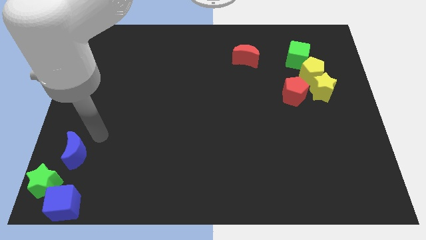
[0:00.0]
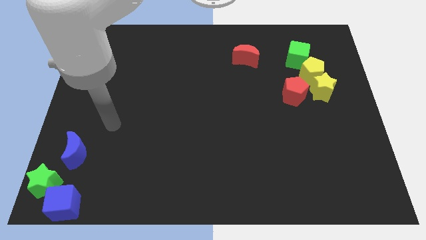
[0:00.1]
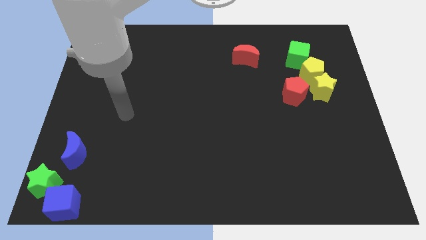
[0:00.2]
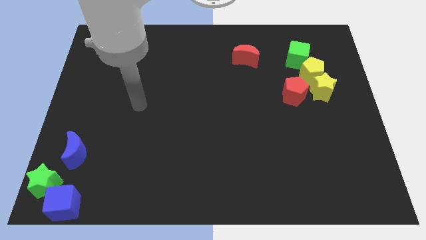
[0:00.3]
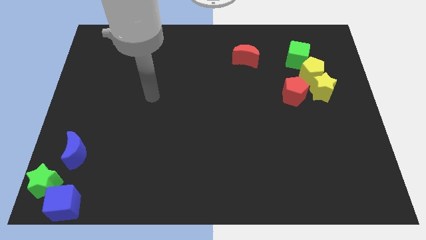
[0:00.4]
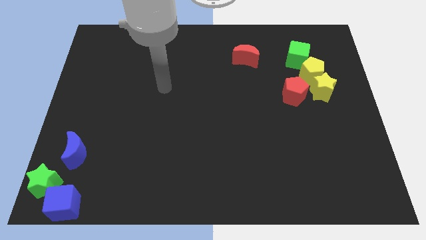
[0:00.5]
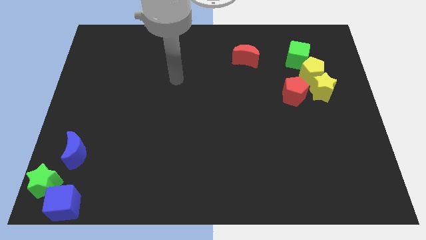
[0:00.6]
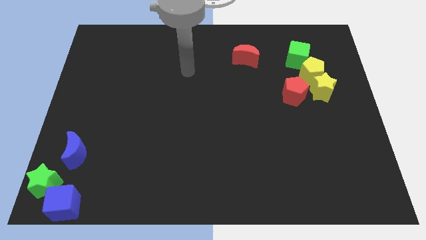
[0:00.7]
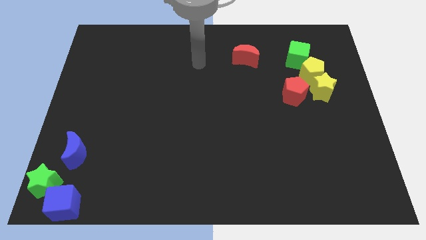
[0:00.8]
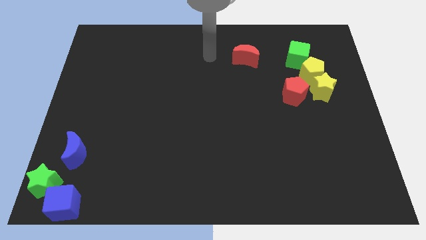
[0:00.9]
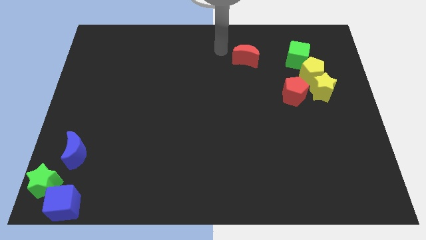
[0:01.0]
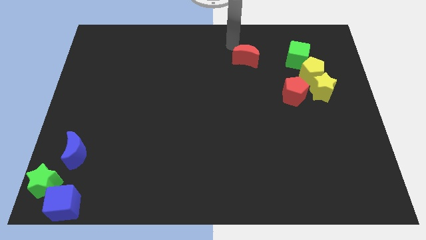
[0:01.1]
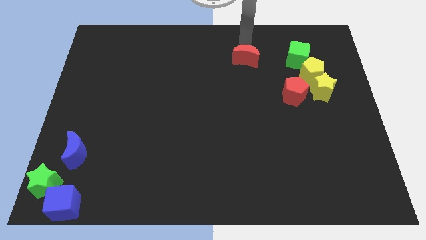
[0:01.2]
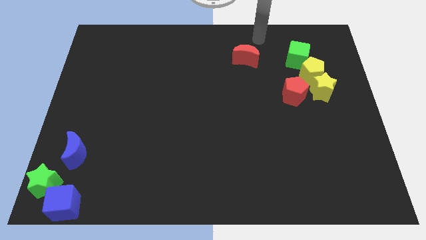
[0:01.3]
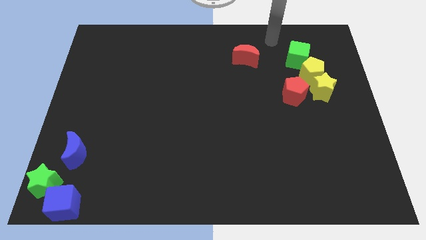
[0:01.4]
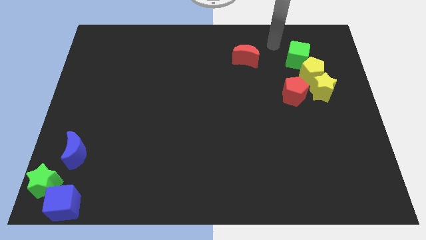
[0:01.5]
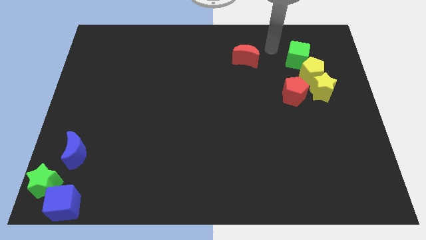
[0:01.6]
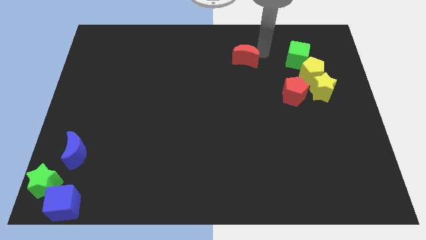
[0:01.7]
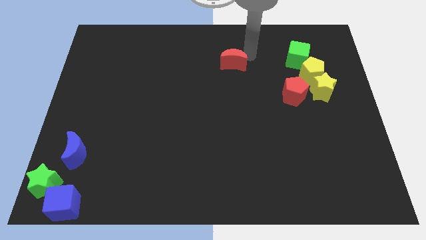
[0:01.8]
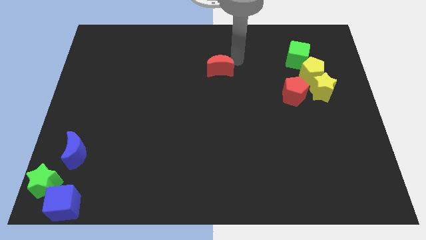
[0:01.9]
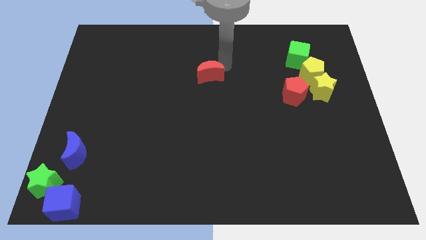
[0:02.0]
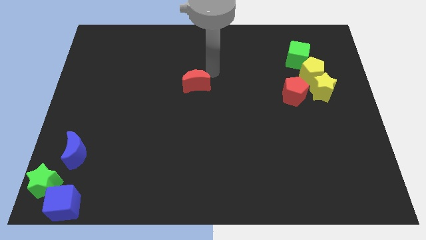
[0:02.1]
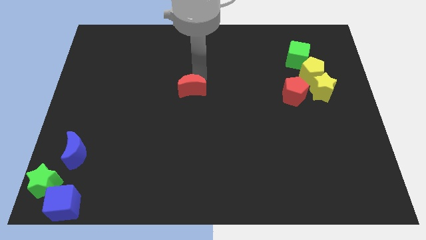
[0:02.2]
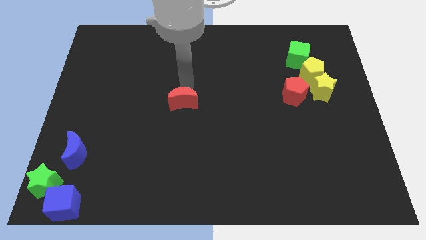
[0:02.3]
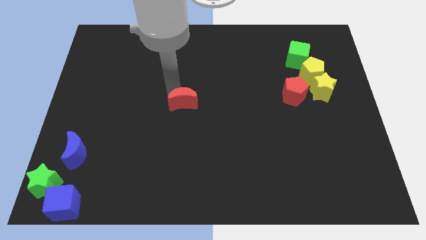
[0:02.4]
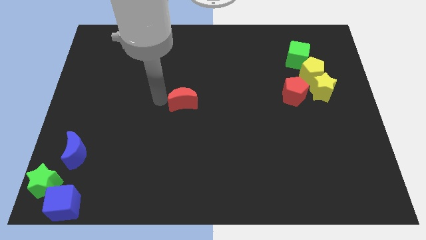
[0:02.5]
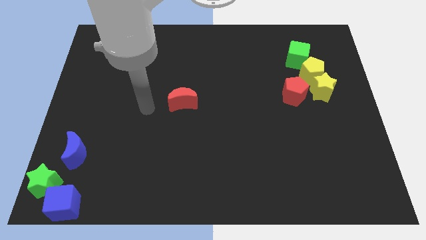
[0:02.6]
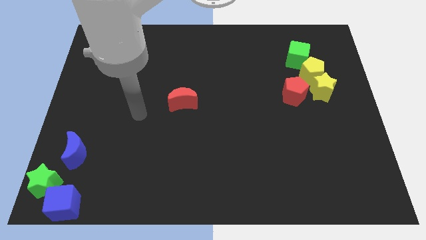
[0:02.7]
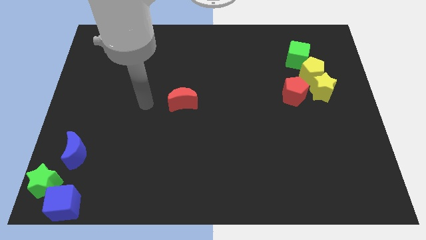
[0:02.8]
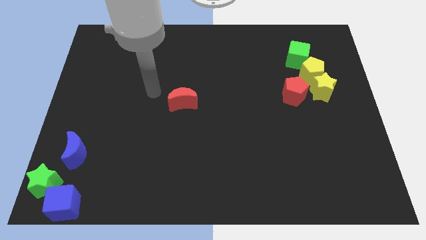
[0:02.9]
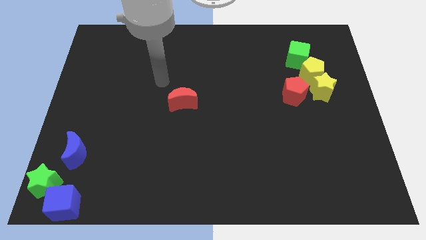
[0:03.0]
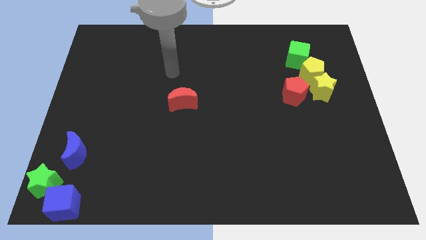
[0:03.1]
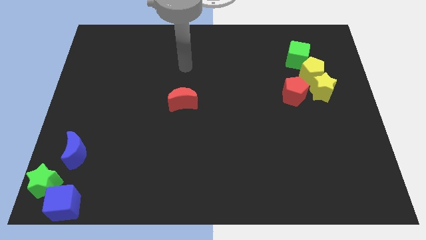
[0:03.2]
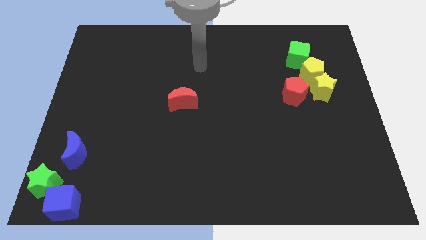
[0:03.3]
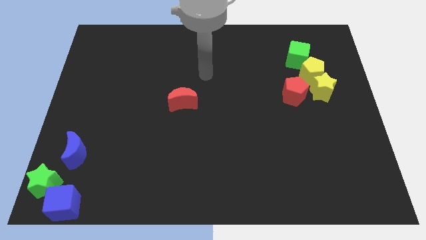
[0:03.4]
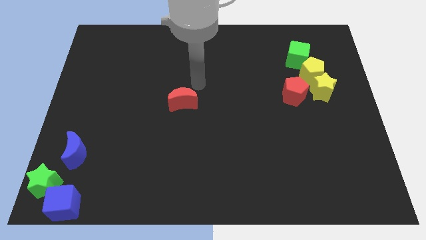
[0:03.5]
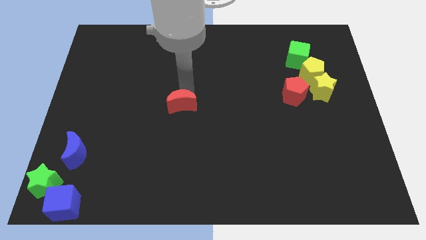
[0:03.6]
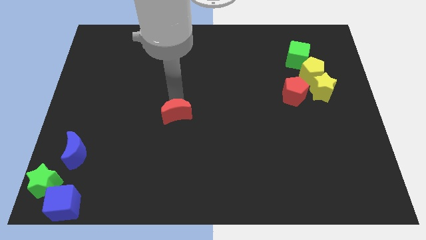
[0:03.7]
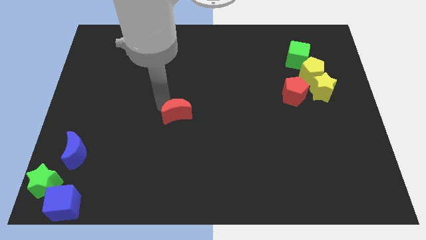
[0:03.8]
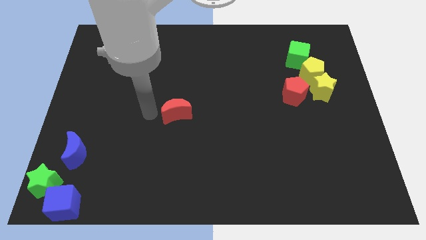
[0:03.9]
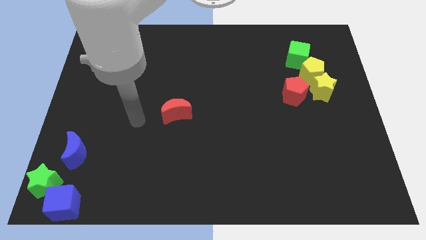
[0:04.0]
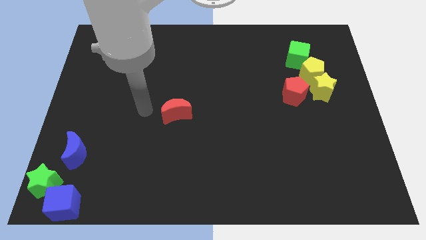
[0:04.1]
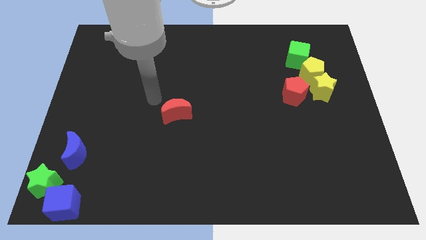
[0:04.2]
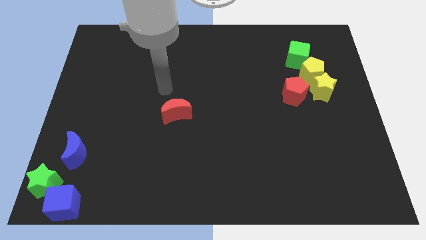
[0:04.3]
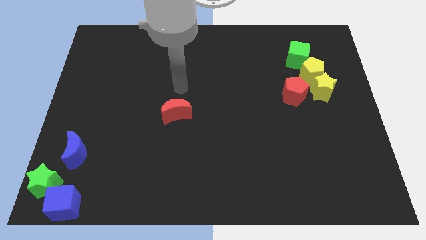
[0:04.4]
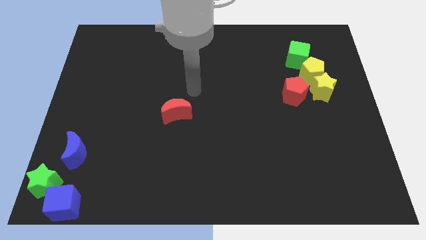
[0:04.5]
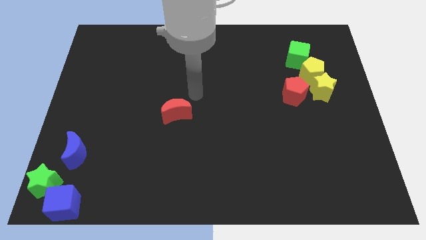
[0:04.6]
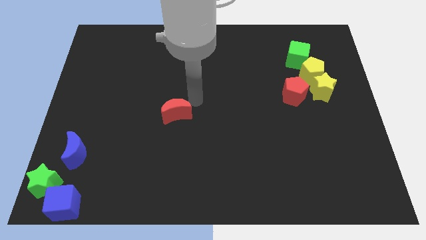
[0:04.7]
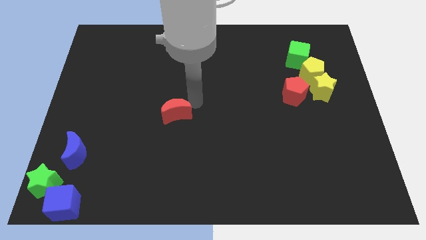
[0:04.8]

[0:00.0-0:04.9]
place red crescent to the left of the red pentagon

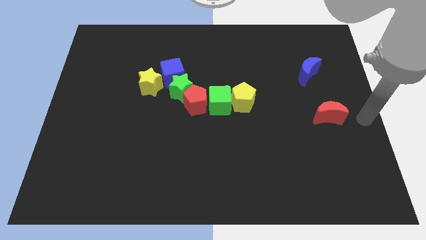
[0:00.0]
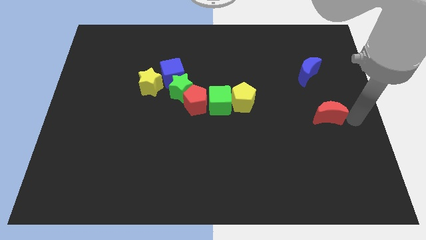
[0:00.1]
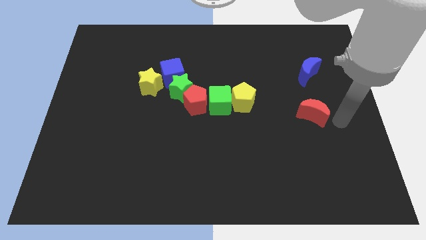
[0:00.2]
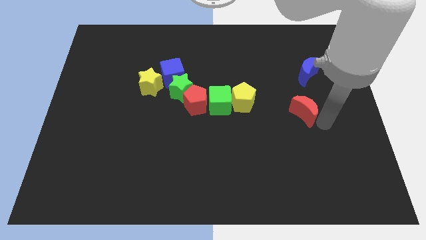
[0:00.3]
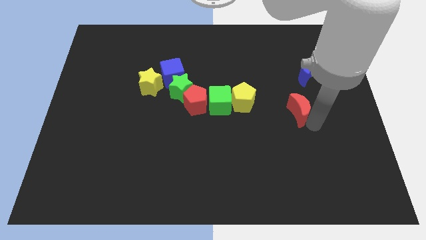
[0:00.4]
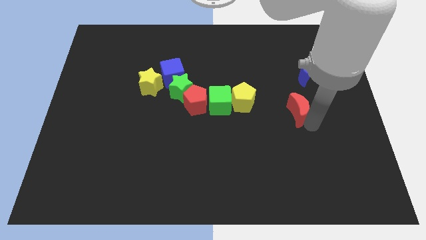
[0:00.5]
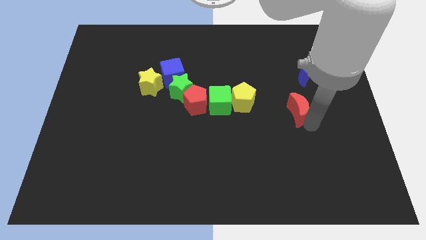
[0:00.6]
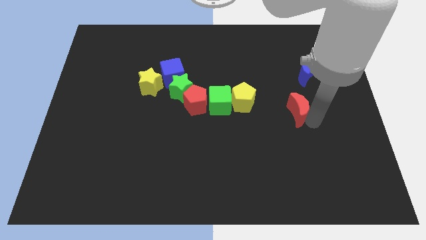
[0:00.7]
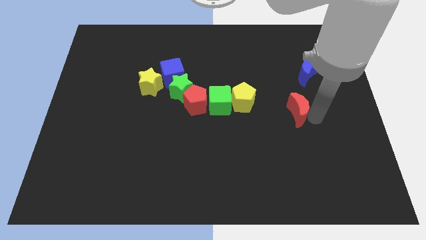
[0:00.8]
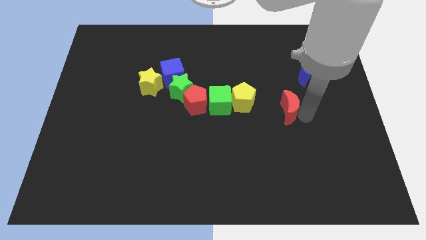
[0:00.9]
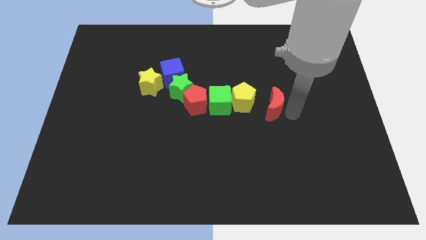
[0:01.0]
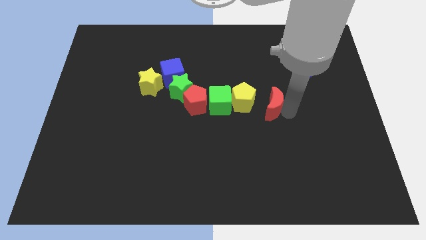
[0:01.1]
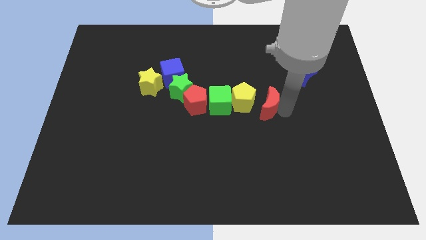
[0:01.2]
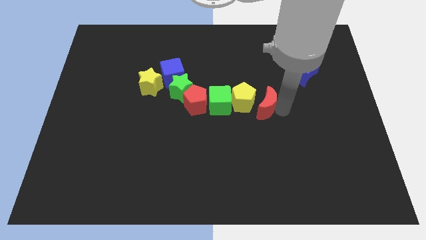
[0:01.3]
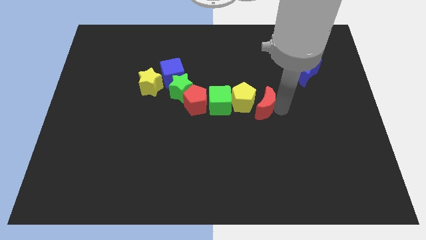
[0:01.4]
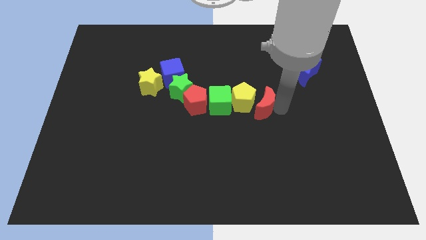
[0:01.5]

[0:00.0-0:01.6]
move the red moon towards the yellow pentagon

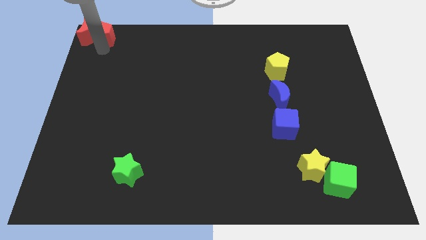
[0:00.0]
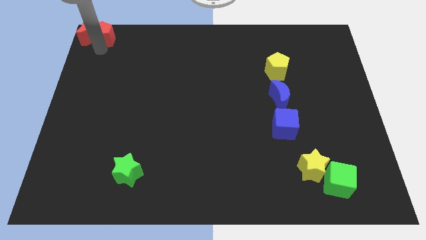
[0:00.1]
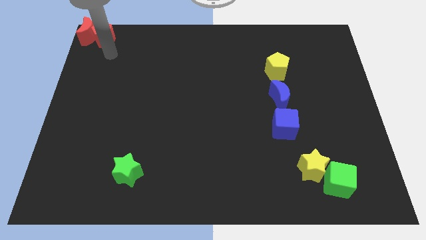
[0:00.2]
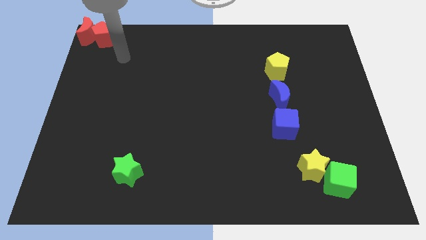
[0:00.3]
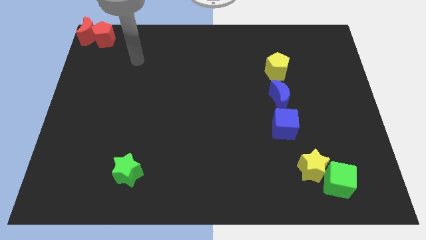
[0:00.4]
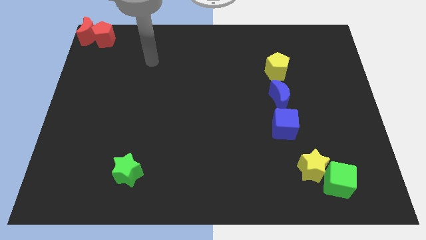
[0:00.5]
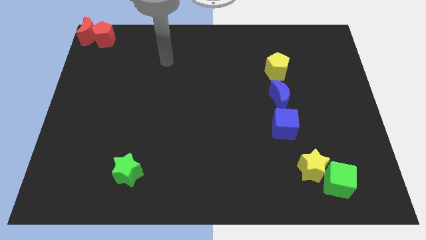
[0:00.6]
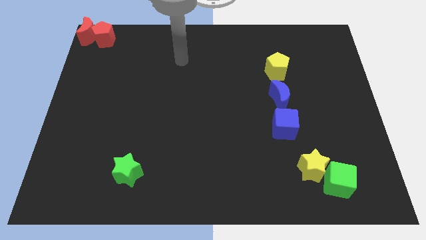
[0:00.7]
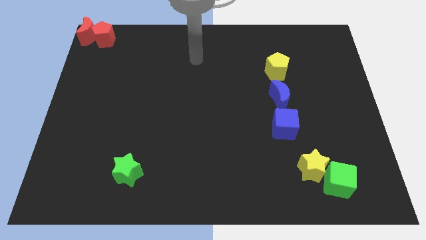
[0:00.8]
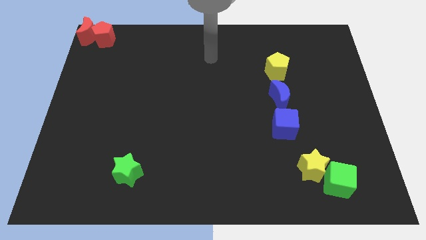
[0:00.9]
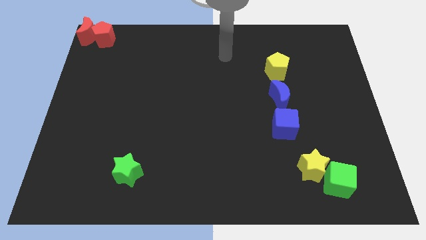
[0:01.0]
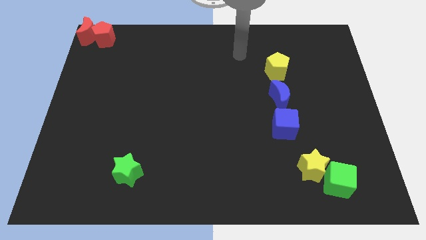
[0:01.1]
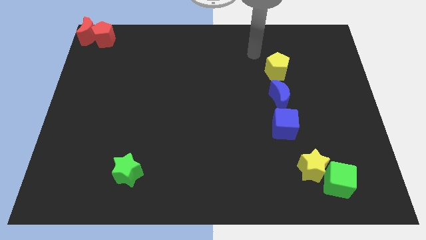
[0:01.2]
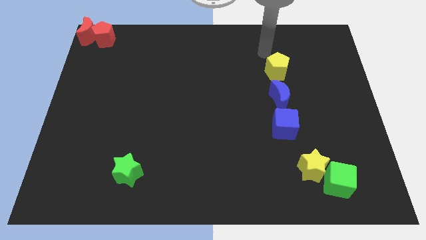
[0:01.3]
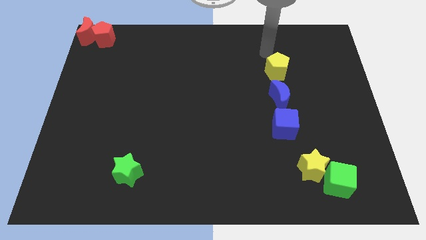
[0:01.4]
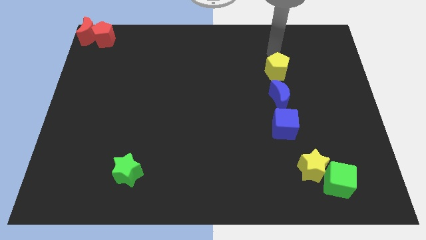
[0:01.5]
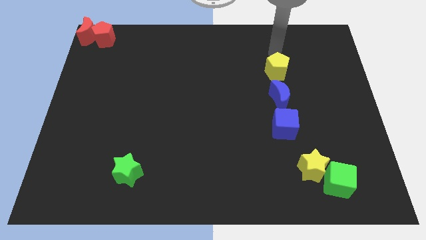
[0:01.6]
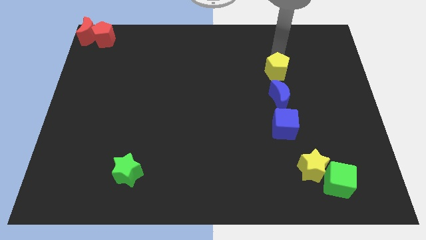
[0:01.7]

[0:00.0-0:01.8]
point the arm above the yellow pentagon

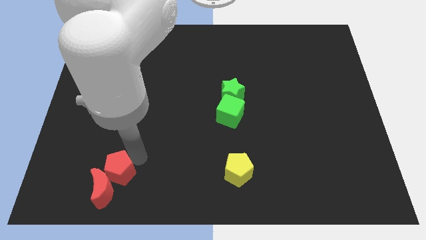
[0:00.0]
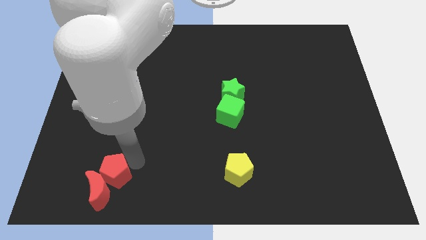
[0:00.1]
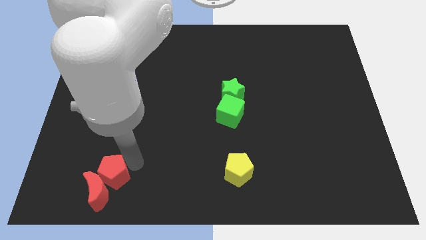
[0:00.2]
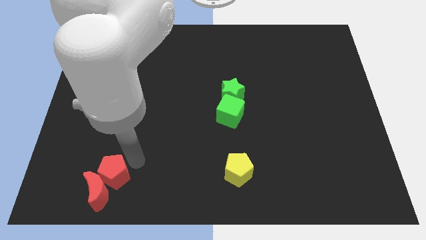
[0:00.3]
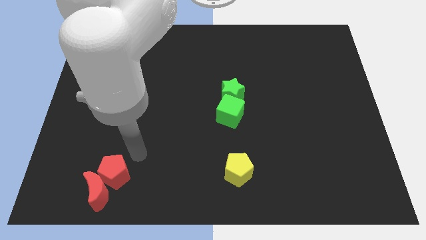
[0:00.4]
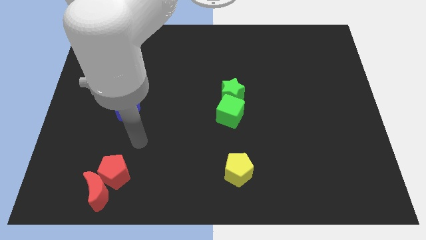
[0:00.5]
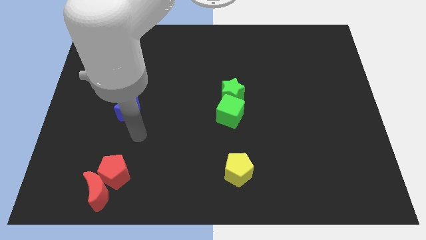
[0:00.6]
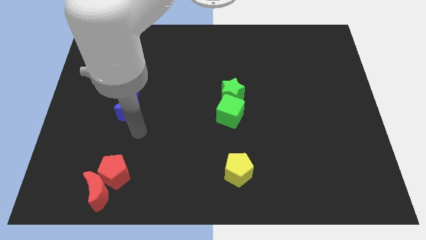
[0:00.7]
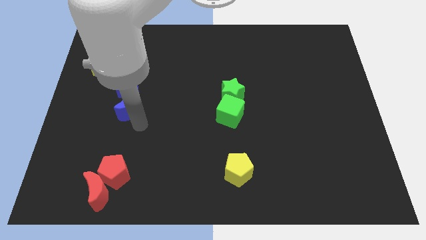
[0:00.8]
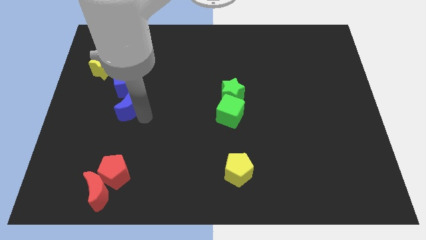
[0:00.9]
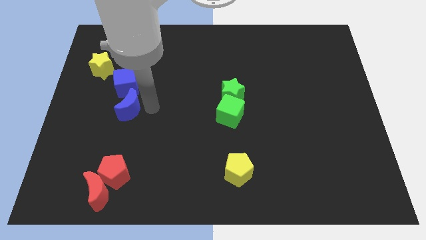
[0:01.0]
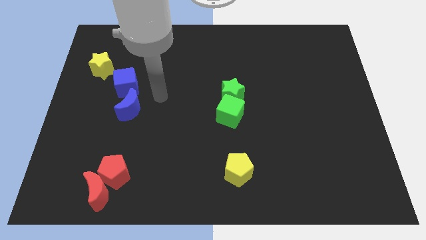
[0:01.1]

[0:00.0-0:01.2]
push the red pentagon into the red crescent
